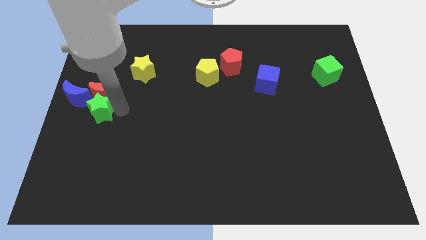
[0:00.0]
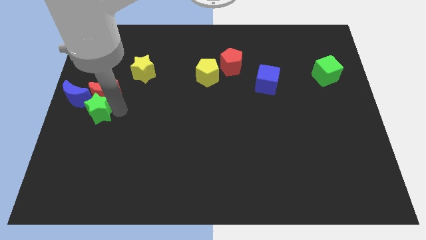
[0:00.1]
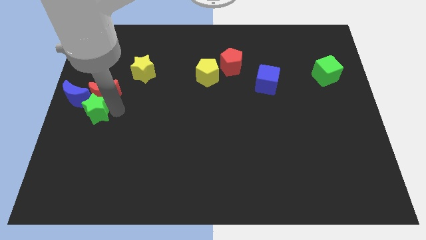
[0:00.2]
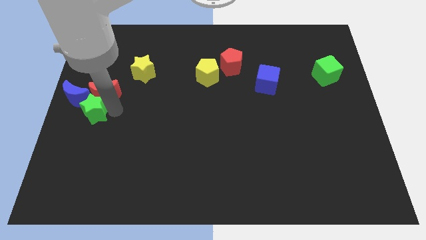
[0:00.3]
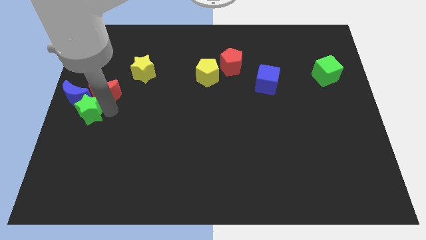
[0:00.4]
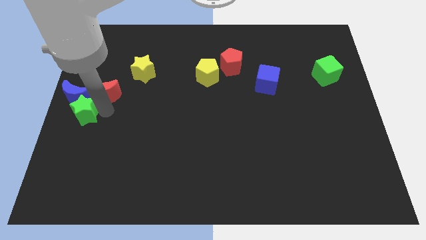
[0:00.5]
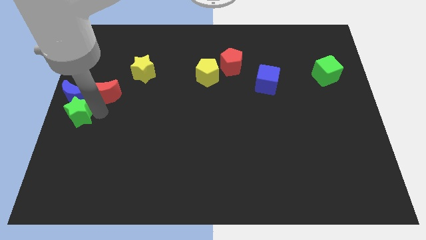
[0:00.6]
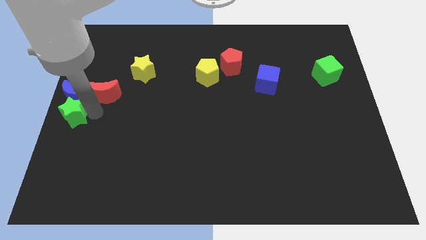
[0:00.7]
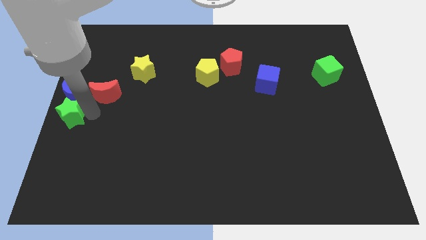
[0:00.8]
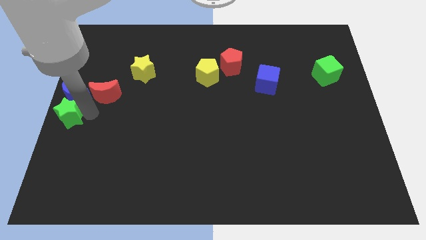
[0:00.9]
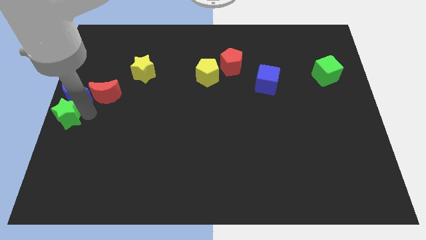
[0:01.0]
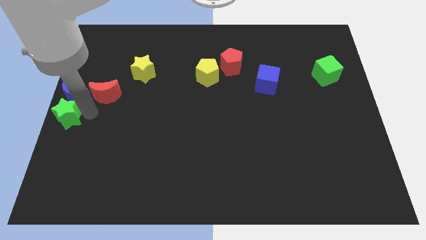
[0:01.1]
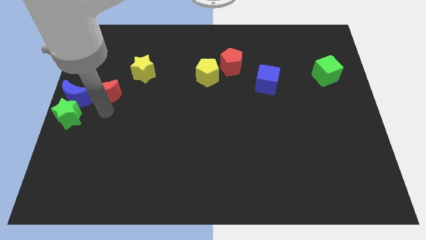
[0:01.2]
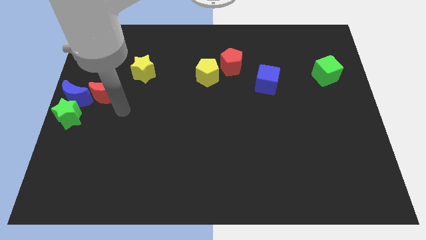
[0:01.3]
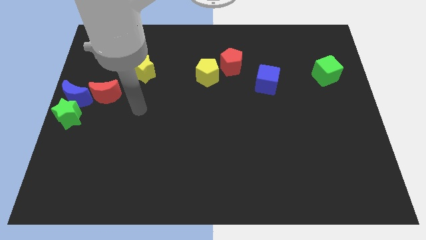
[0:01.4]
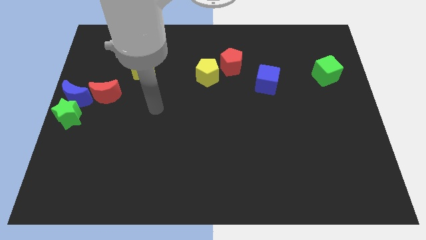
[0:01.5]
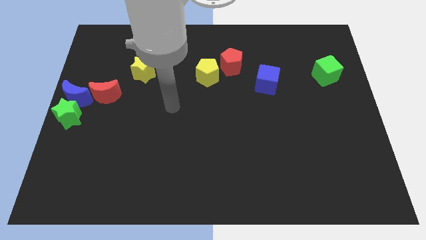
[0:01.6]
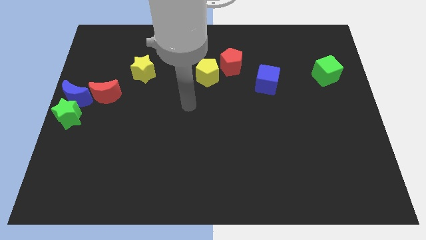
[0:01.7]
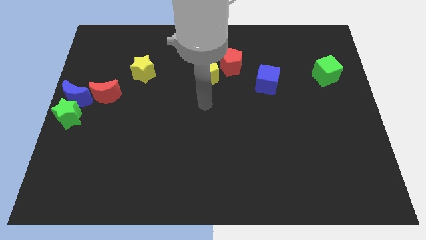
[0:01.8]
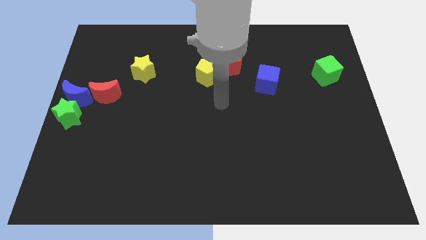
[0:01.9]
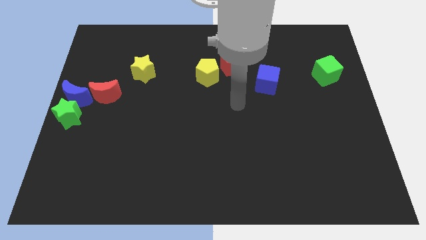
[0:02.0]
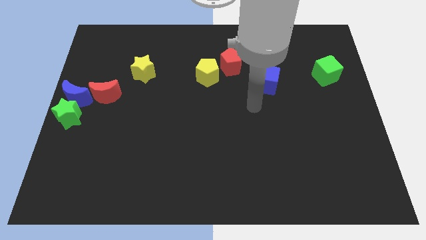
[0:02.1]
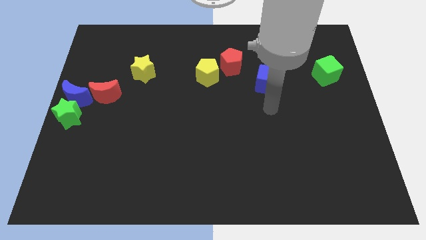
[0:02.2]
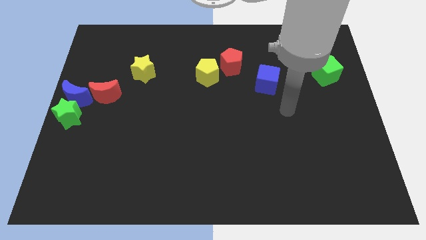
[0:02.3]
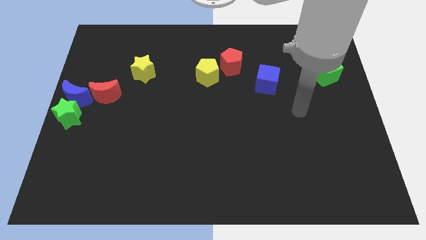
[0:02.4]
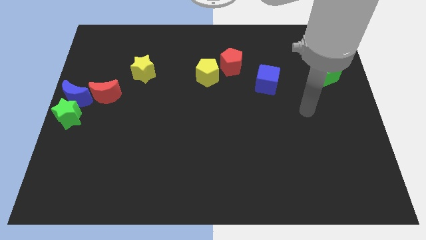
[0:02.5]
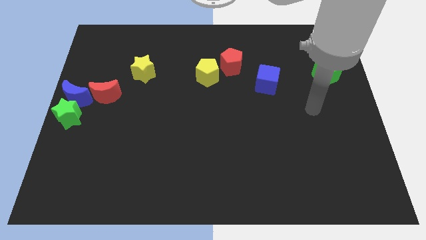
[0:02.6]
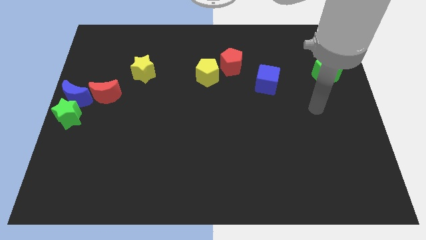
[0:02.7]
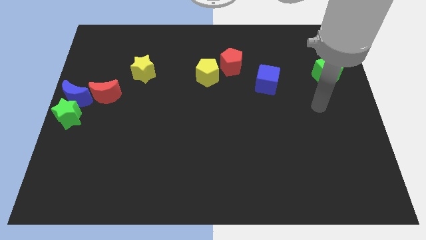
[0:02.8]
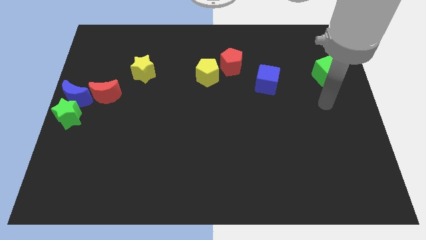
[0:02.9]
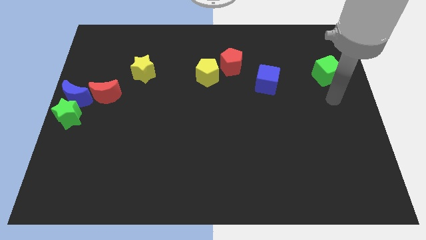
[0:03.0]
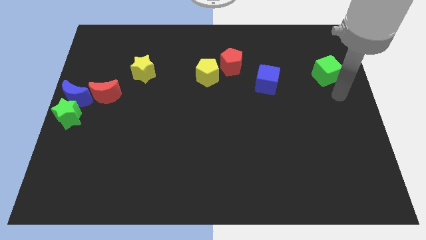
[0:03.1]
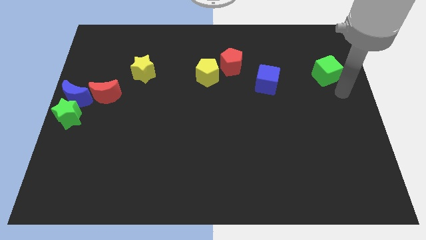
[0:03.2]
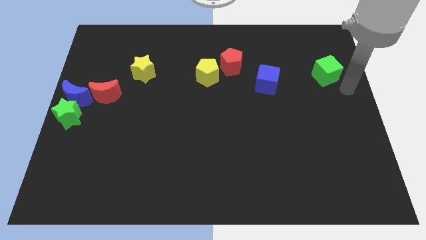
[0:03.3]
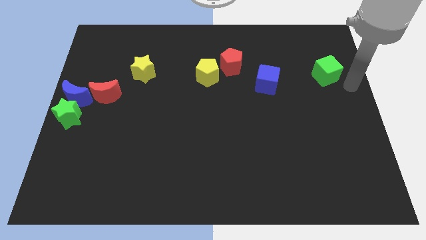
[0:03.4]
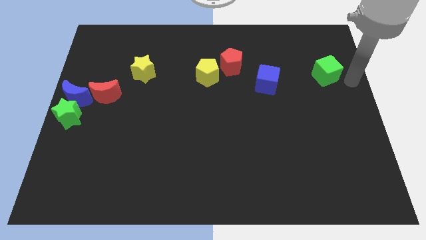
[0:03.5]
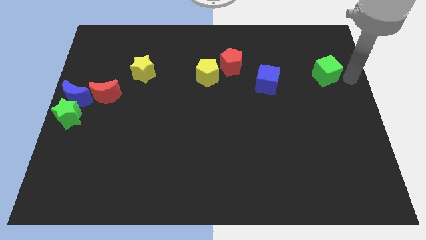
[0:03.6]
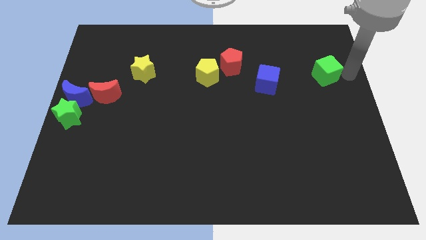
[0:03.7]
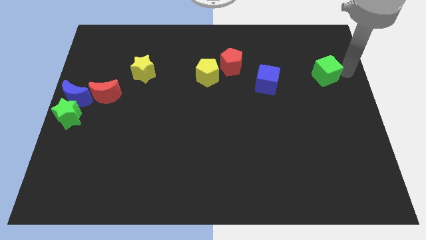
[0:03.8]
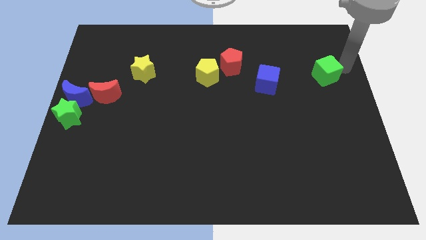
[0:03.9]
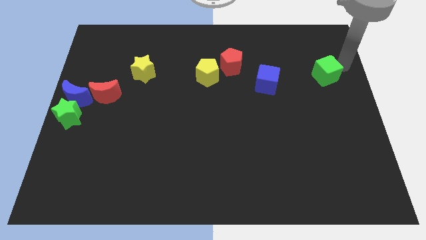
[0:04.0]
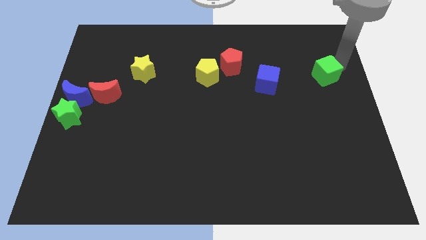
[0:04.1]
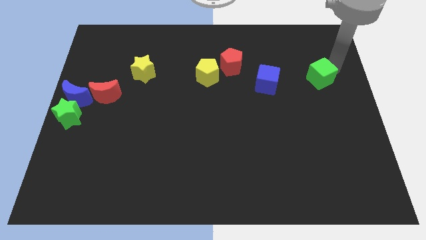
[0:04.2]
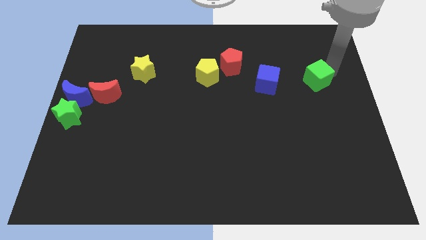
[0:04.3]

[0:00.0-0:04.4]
touch the right of the green cube

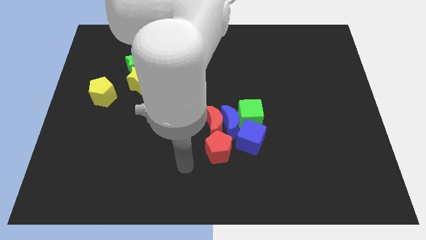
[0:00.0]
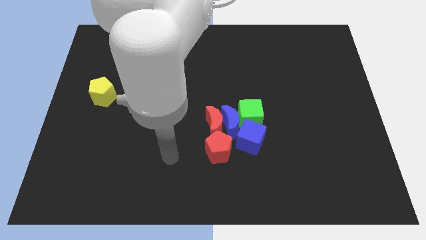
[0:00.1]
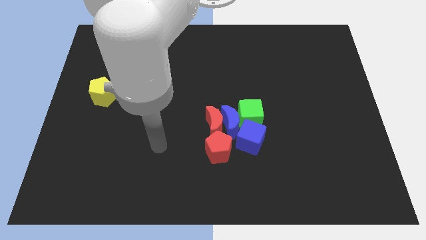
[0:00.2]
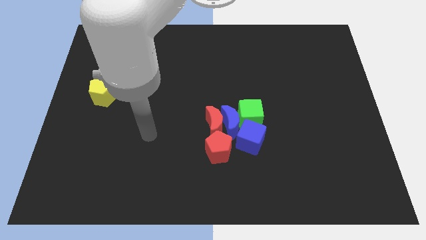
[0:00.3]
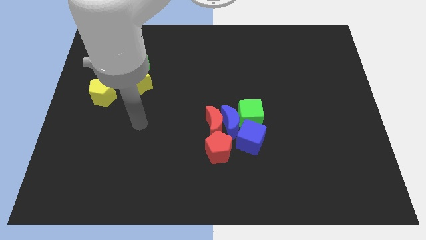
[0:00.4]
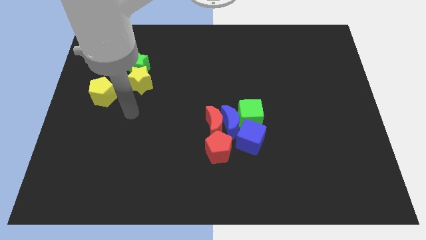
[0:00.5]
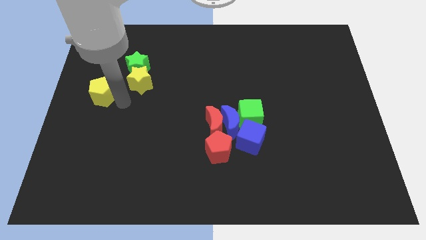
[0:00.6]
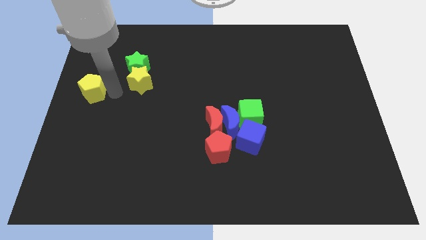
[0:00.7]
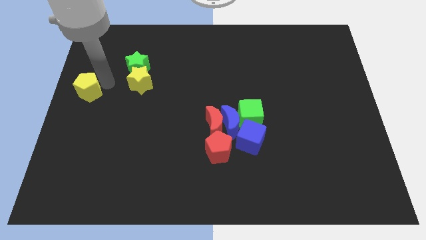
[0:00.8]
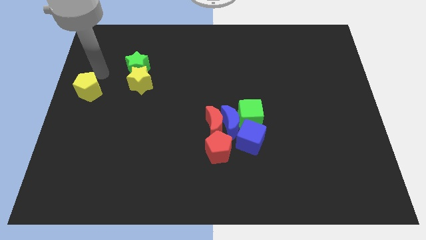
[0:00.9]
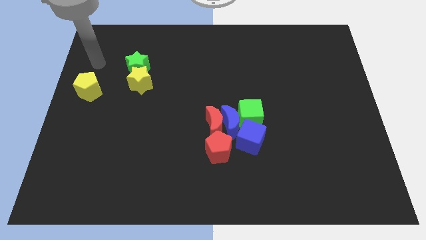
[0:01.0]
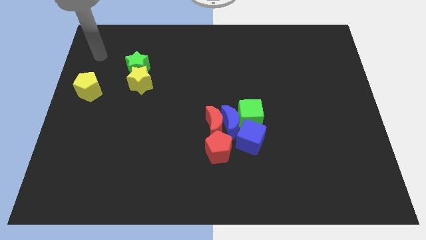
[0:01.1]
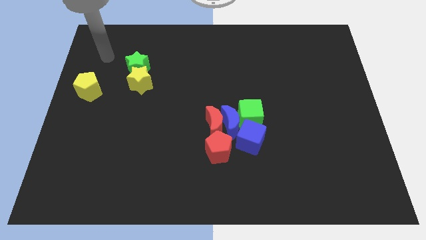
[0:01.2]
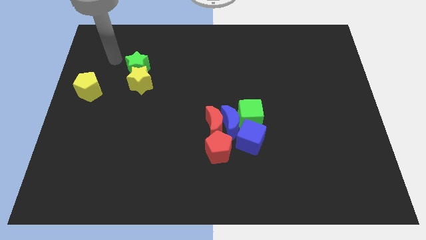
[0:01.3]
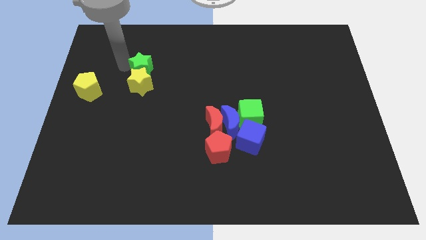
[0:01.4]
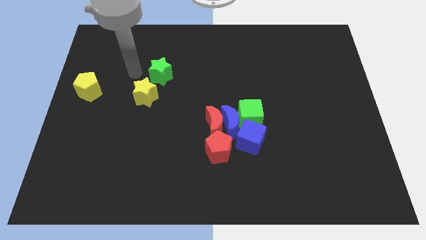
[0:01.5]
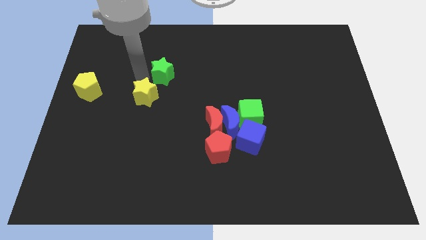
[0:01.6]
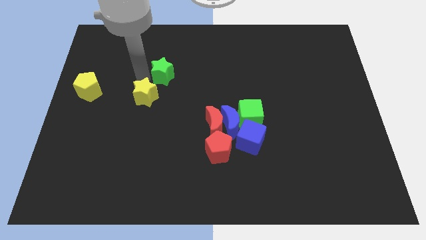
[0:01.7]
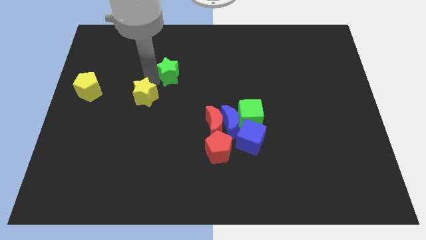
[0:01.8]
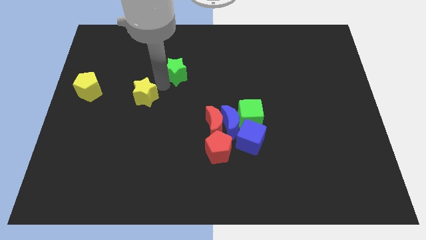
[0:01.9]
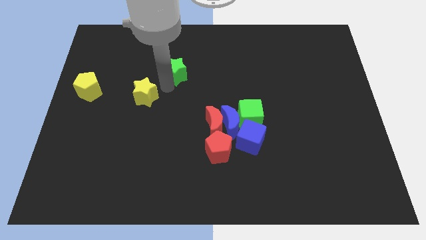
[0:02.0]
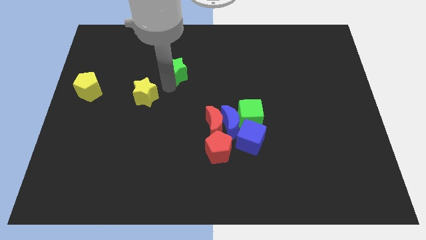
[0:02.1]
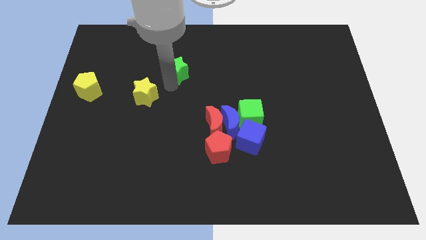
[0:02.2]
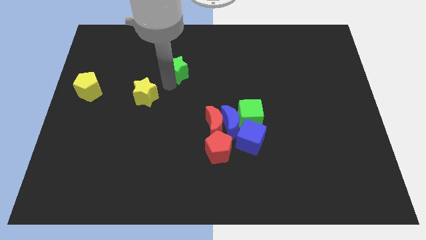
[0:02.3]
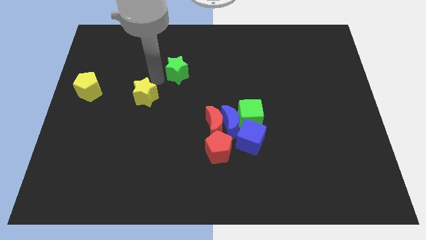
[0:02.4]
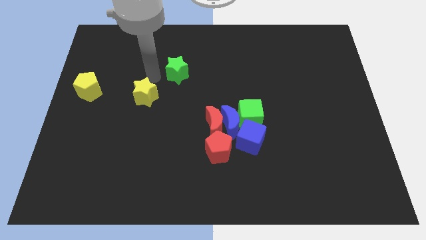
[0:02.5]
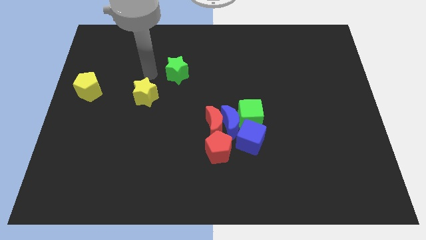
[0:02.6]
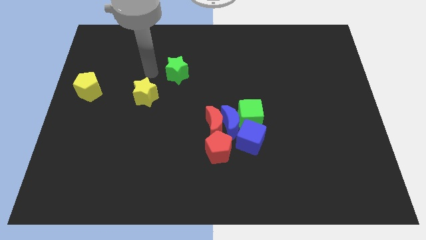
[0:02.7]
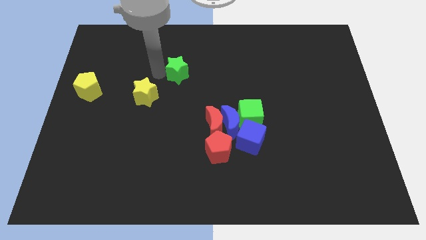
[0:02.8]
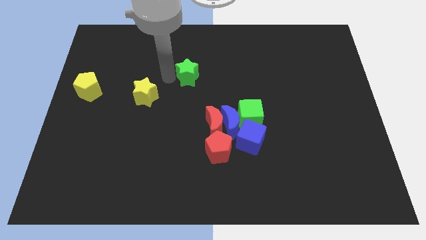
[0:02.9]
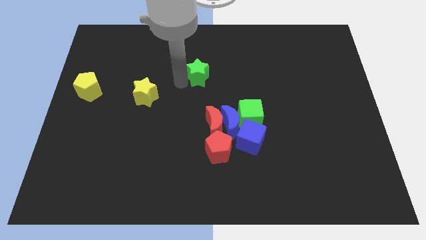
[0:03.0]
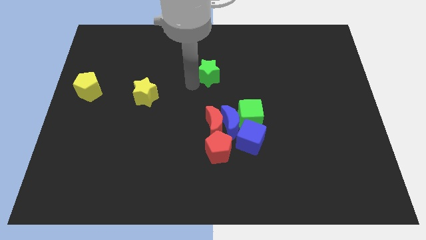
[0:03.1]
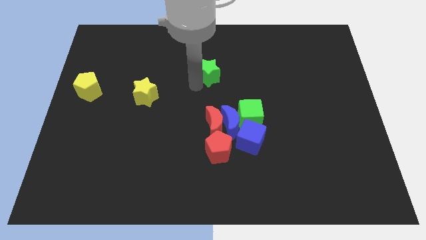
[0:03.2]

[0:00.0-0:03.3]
separate the green star from yellow star

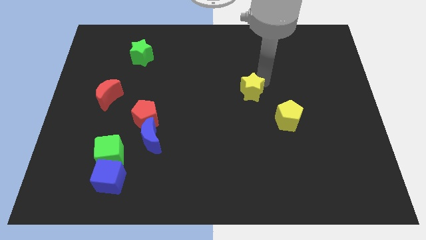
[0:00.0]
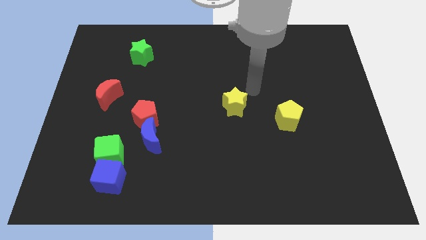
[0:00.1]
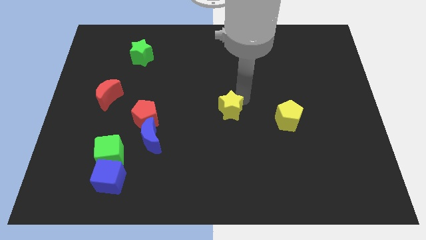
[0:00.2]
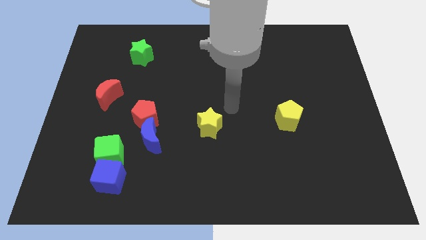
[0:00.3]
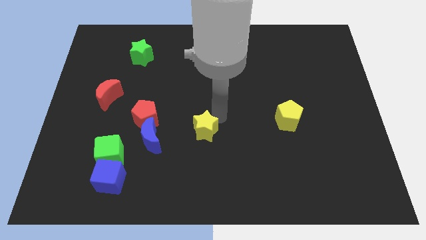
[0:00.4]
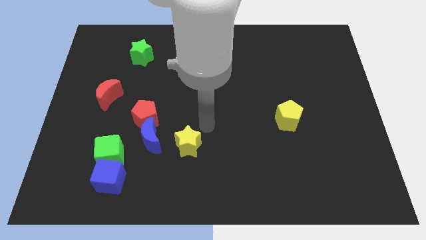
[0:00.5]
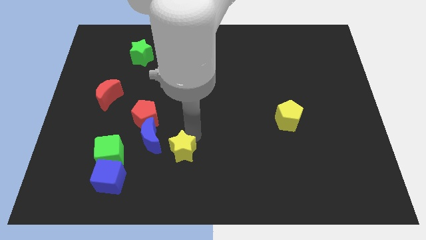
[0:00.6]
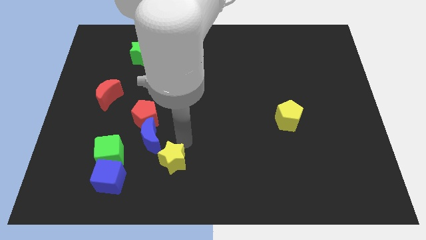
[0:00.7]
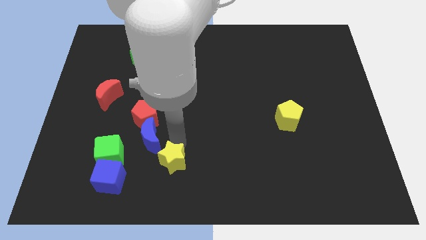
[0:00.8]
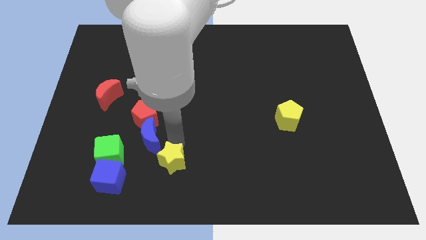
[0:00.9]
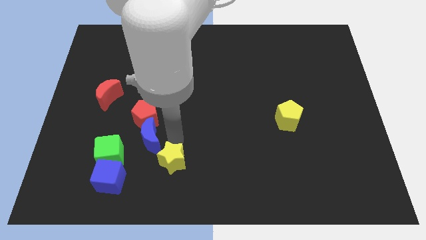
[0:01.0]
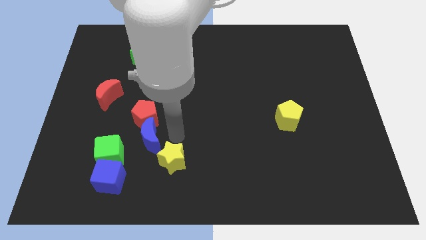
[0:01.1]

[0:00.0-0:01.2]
place the yellow star diagonal to the blue moon
